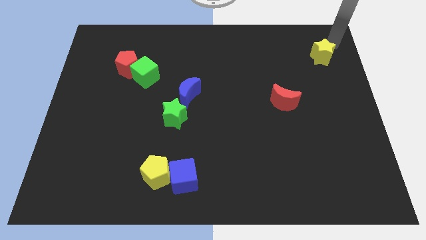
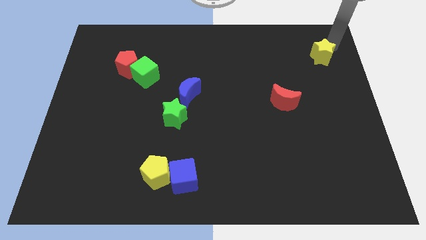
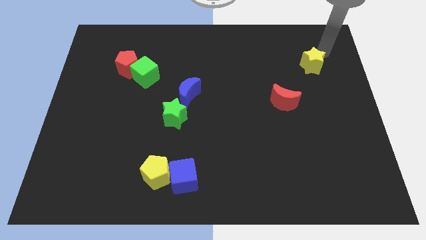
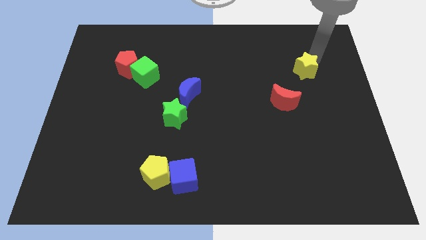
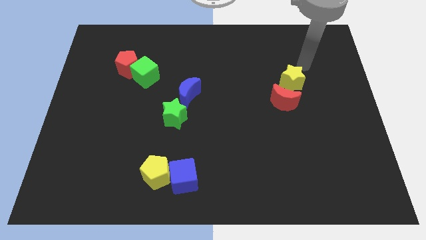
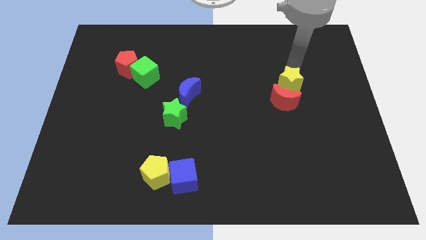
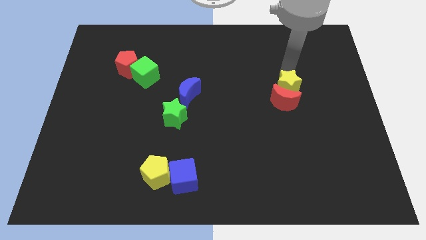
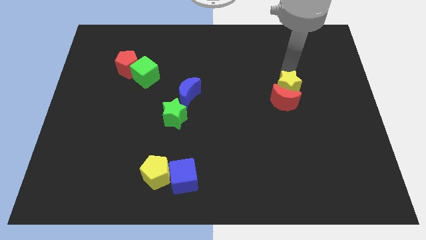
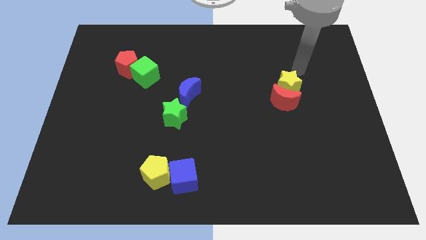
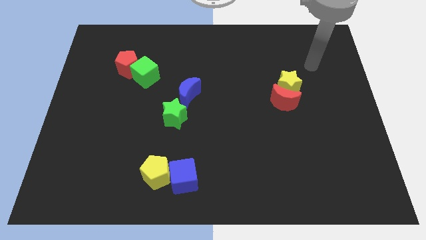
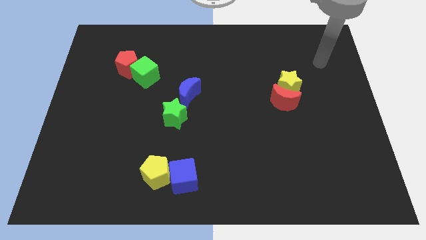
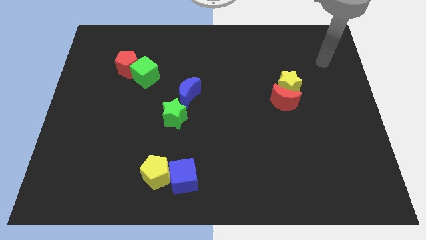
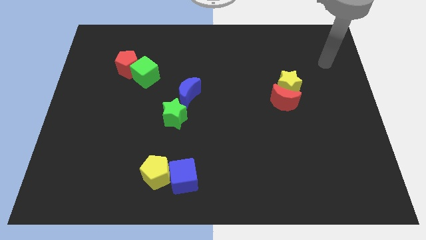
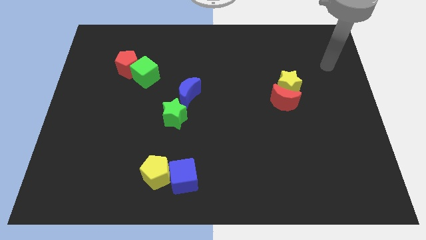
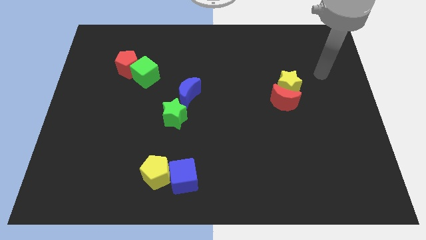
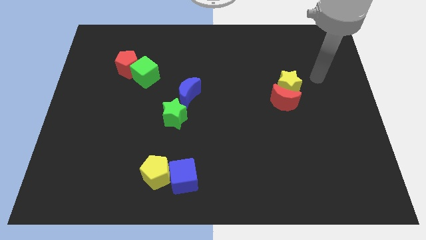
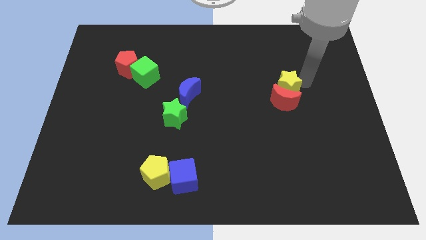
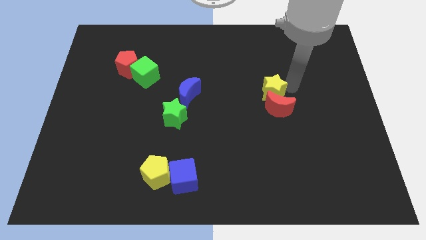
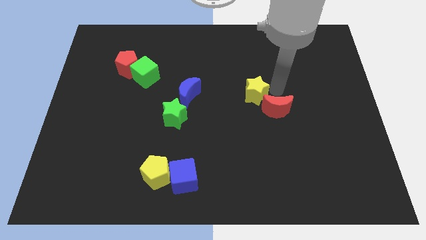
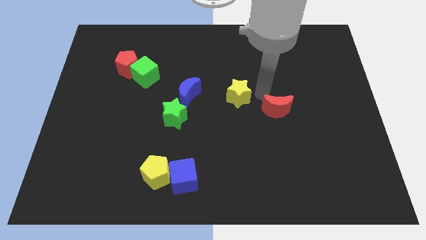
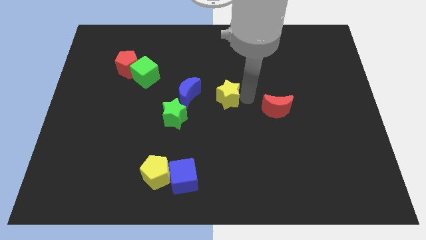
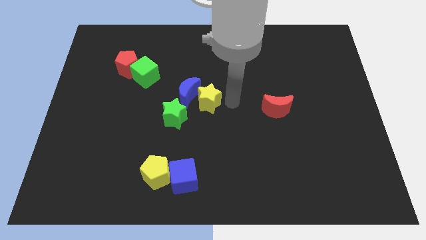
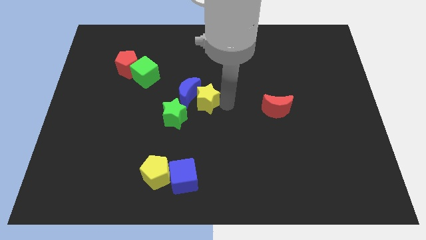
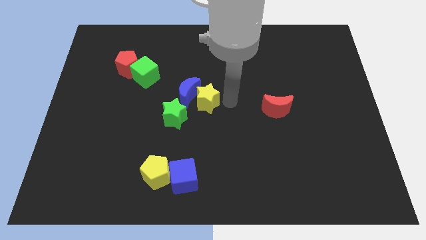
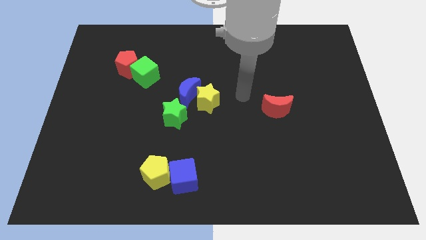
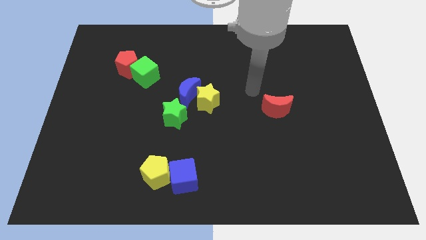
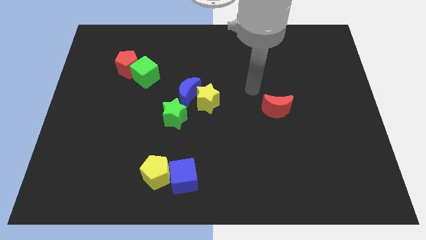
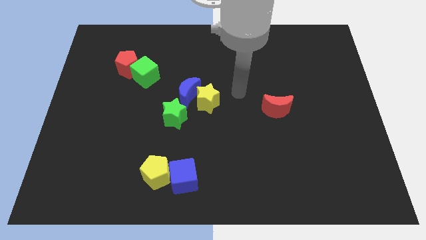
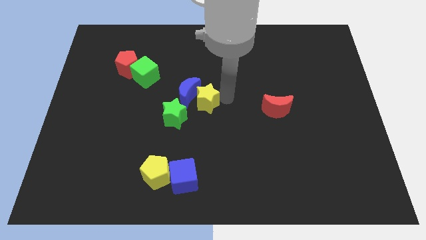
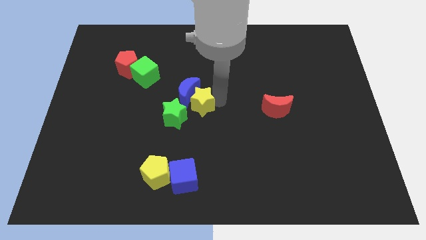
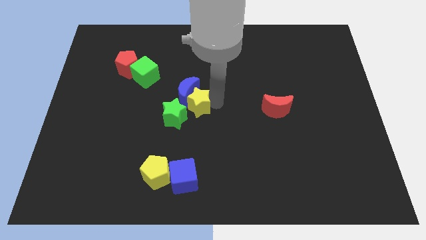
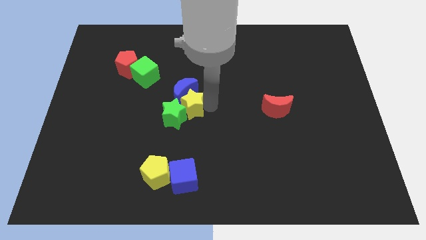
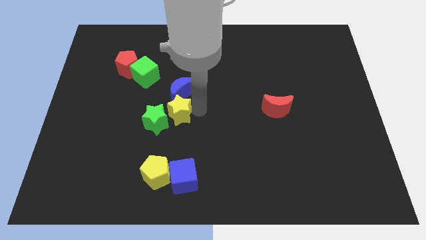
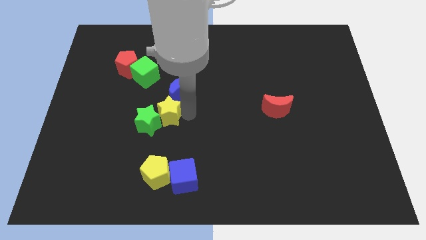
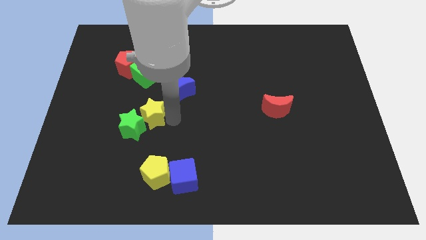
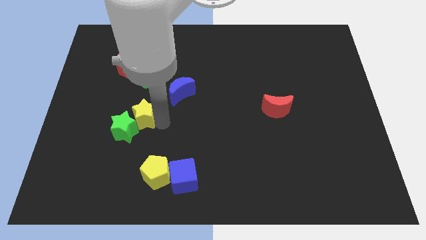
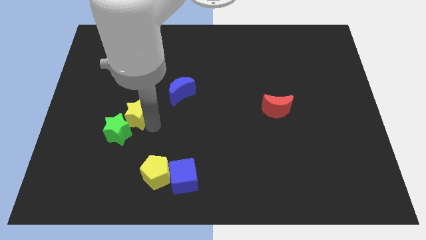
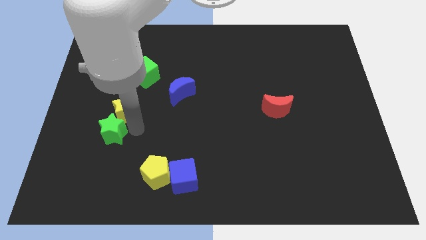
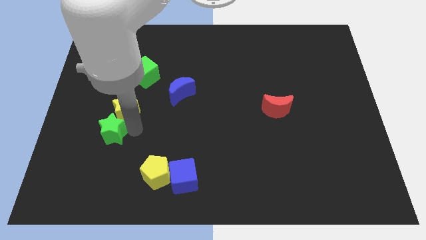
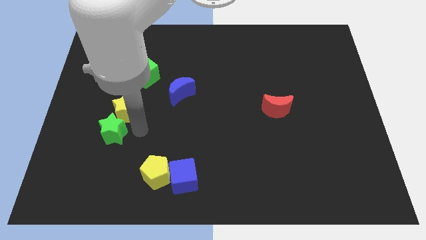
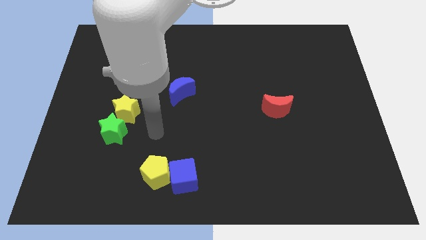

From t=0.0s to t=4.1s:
move the yellow star to the top of green star

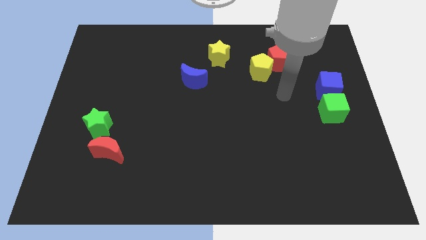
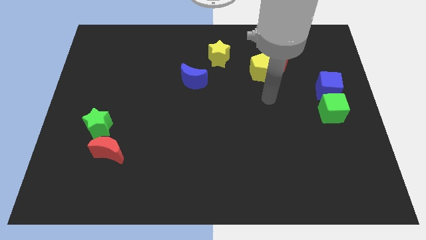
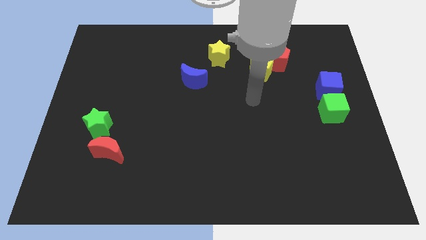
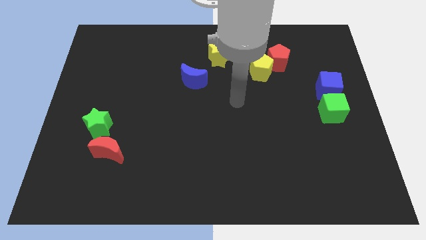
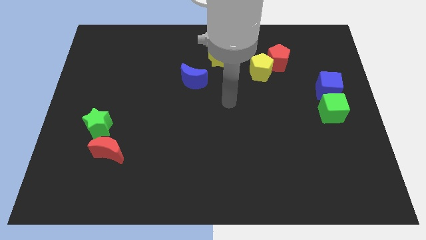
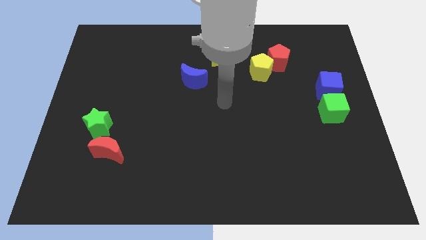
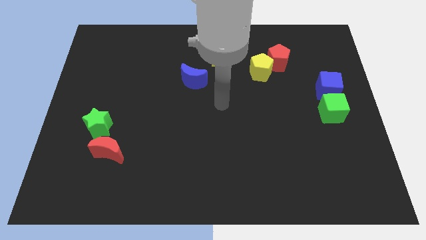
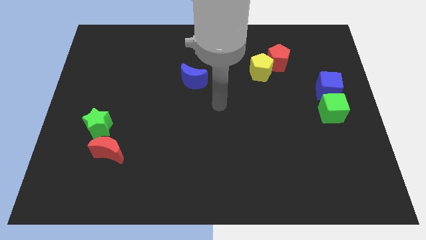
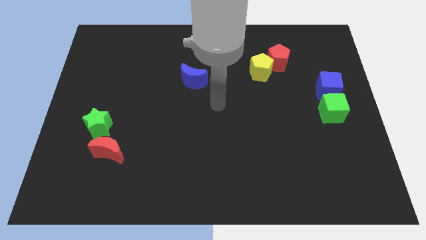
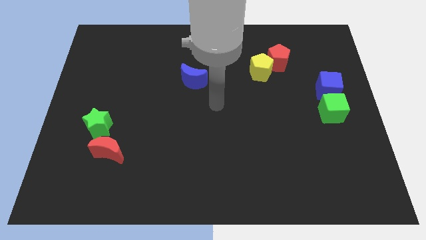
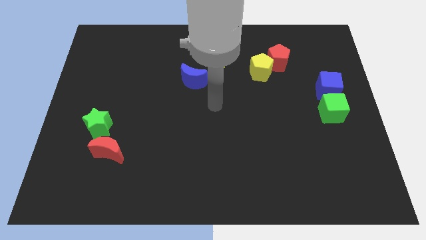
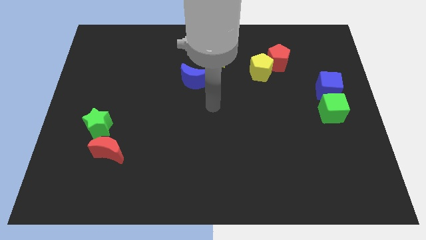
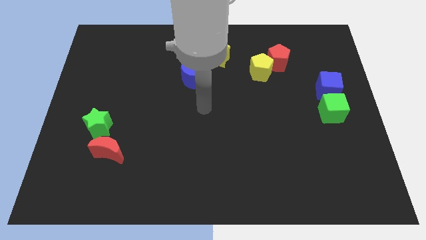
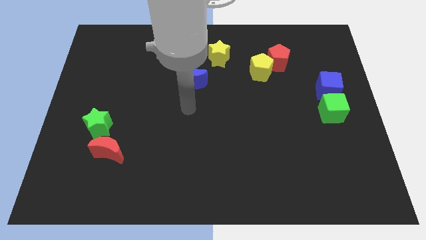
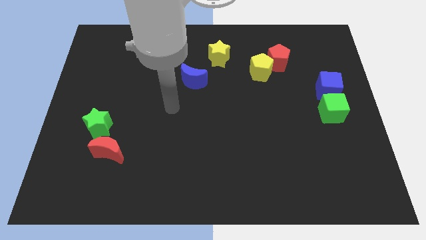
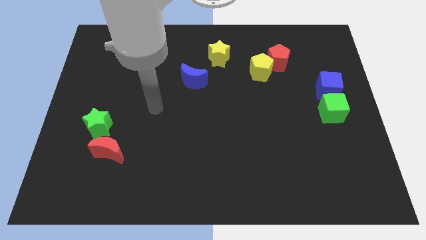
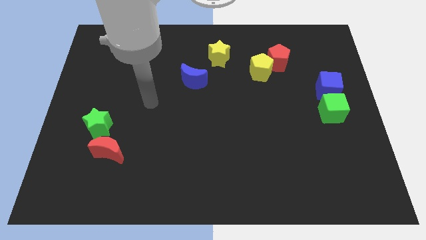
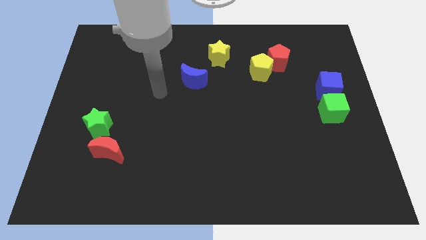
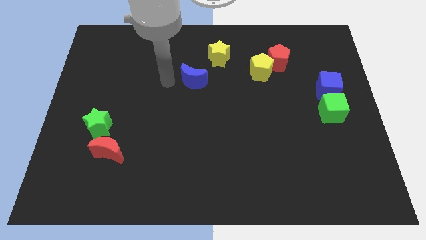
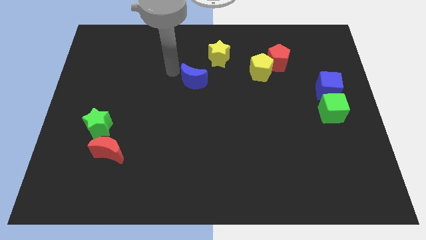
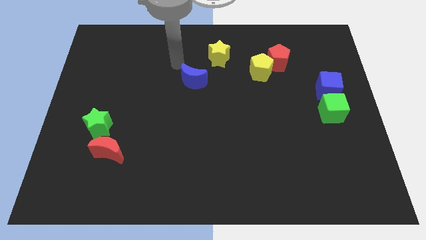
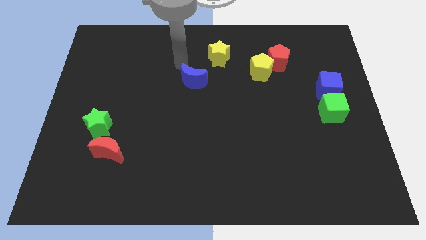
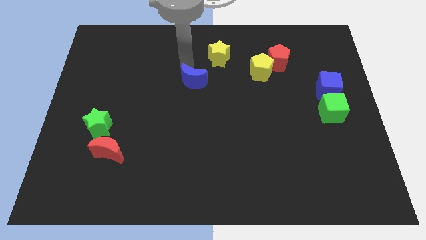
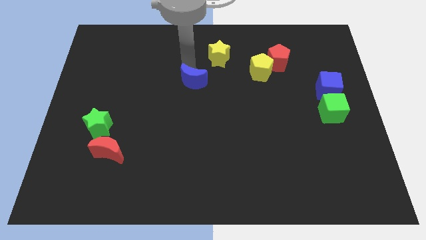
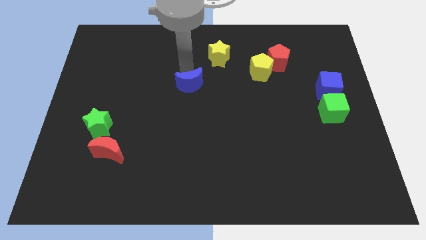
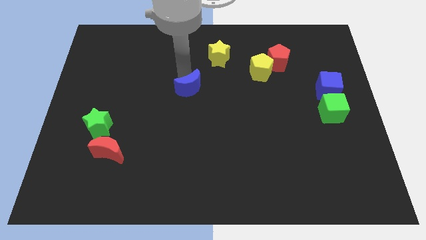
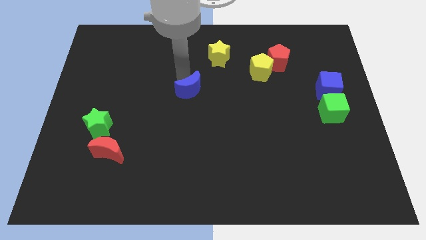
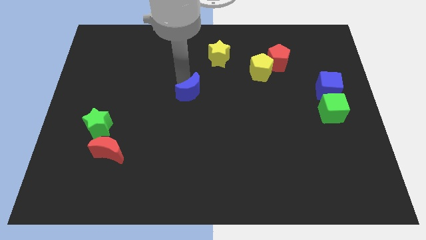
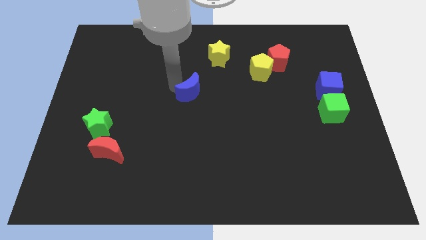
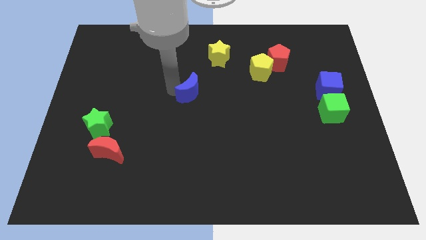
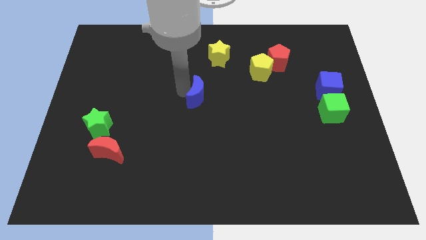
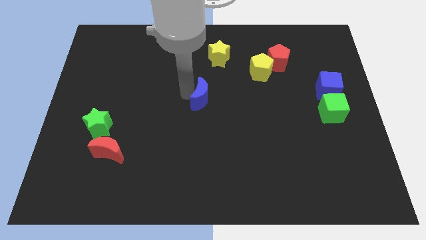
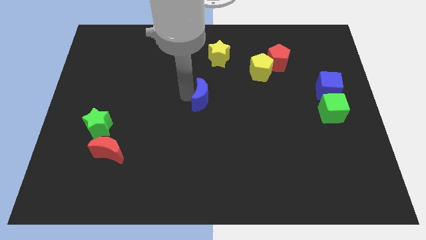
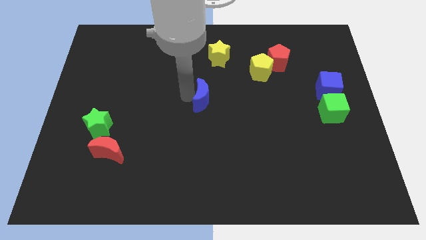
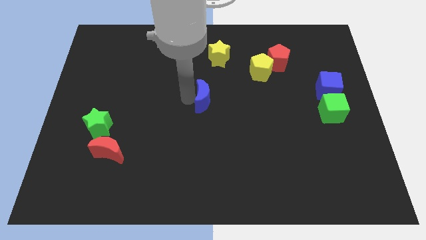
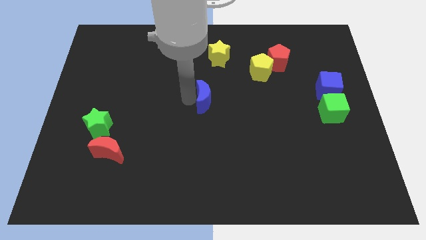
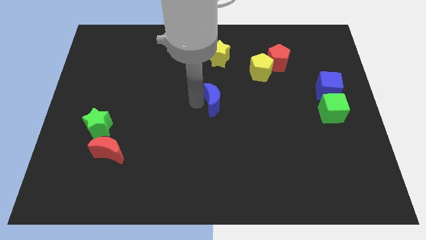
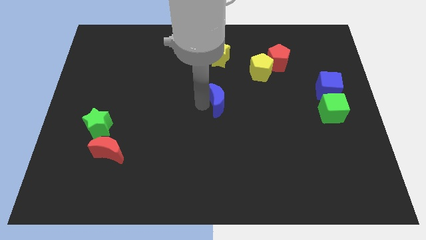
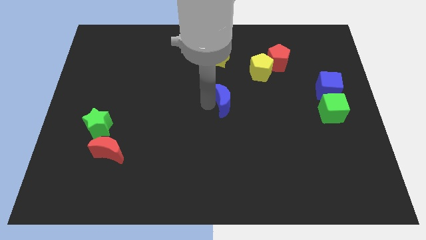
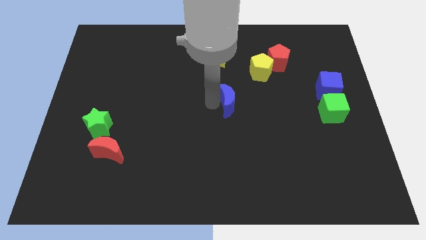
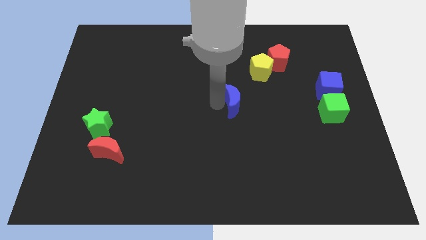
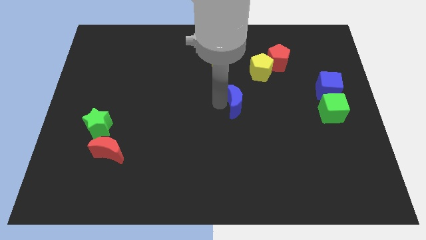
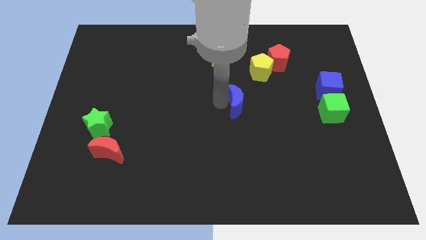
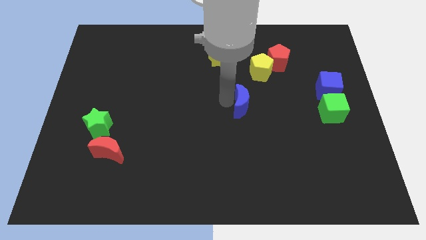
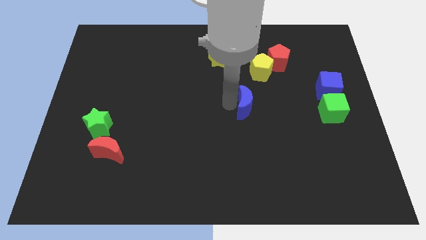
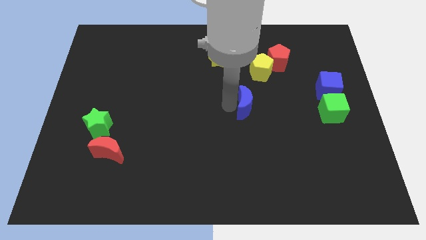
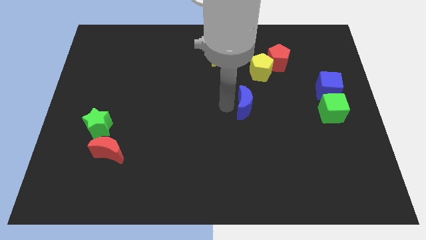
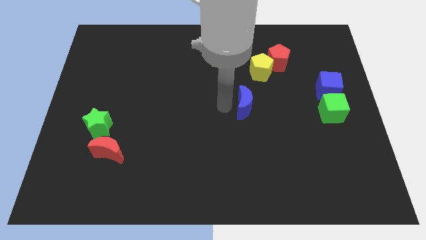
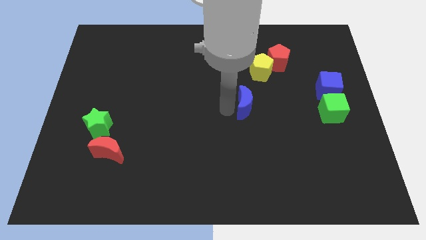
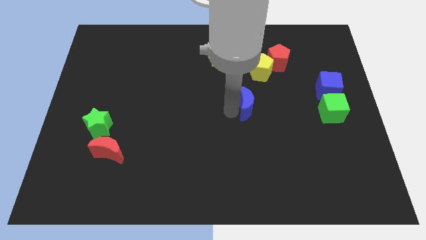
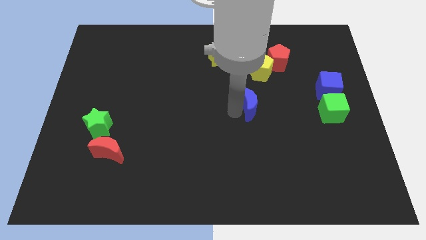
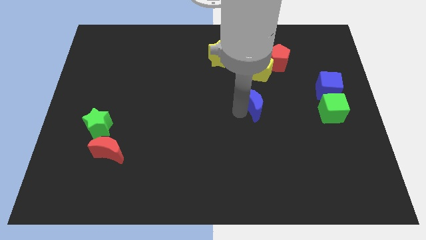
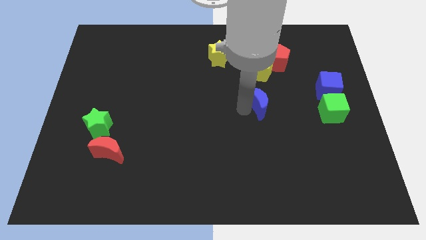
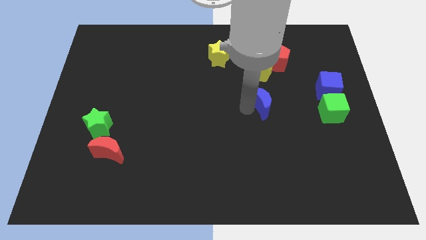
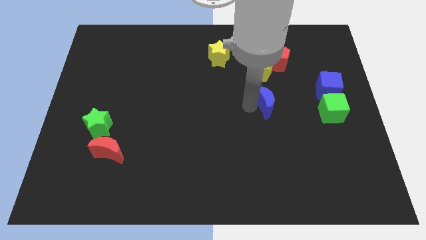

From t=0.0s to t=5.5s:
push the blue crescent below the yellow pentagon
